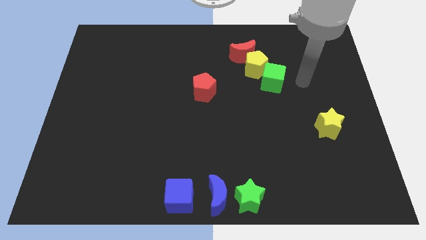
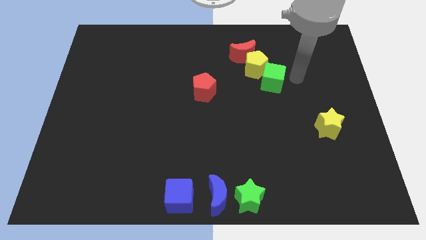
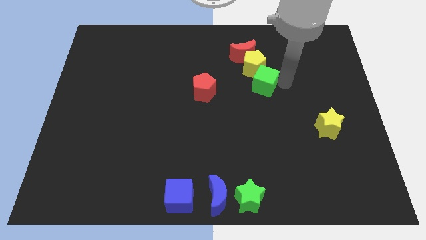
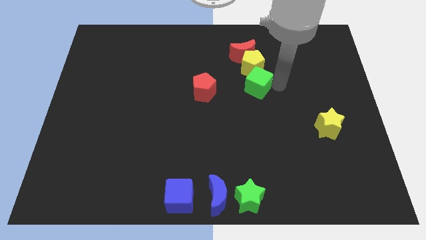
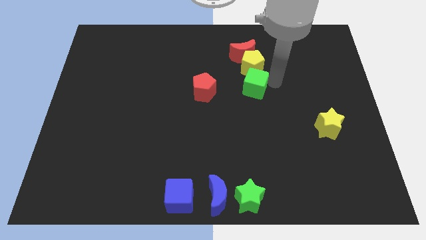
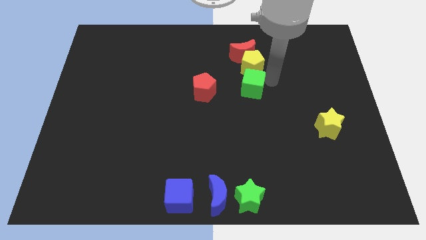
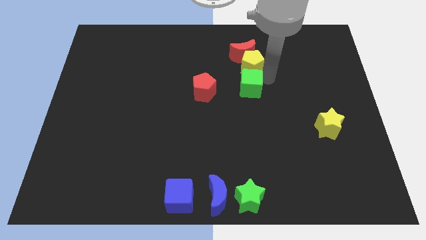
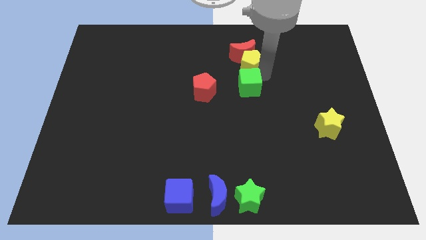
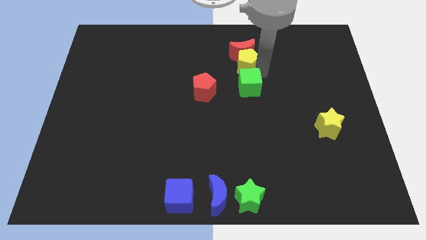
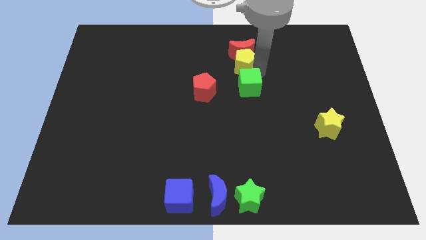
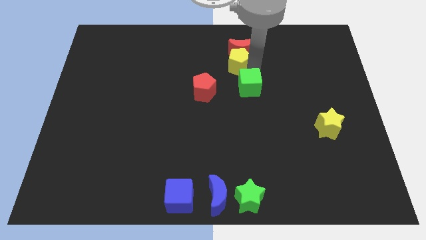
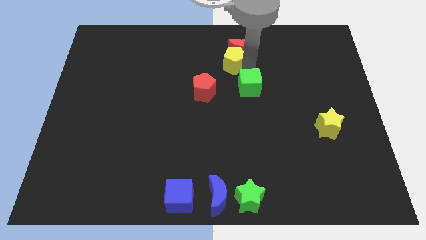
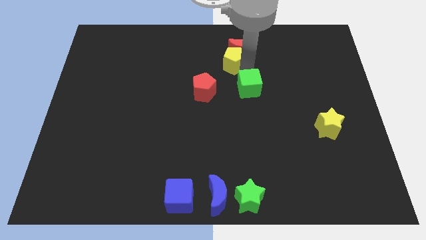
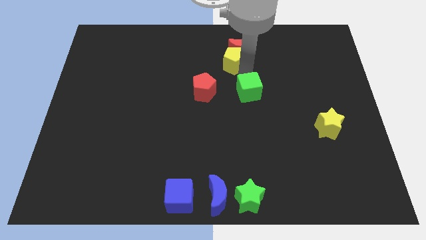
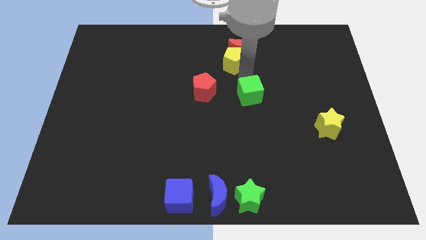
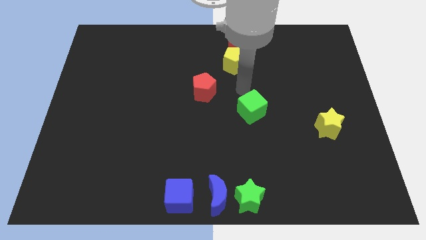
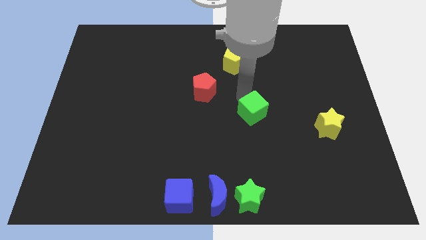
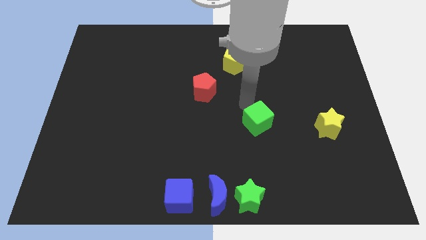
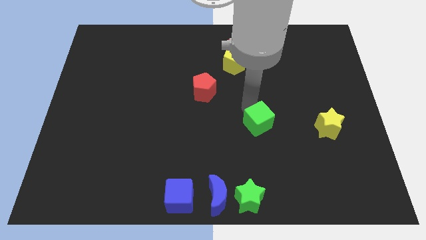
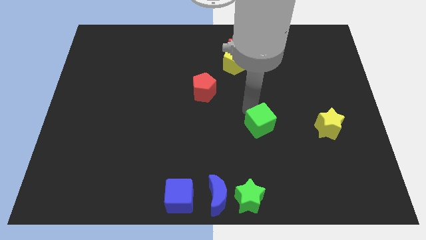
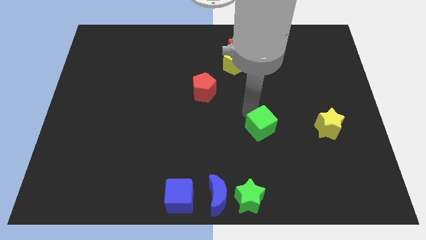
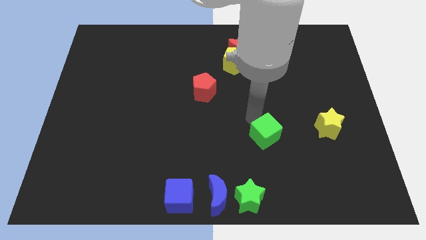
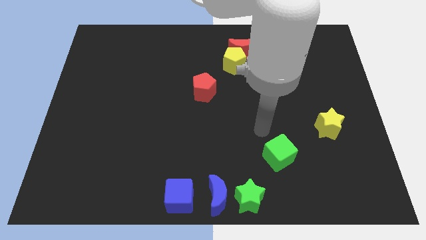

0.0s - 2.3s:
move the green cube diagonally to the left of yellow star

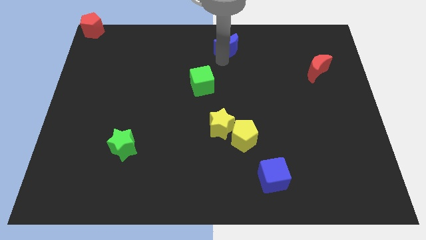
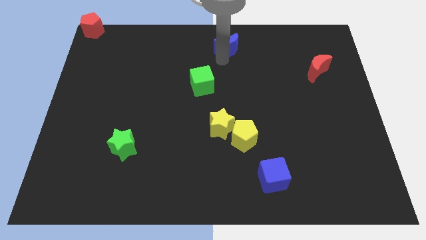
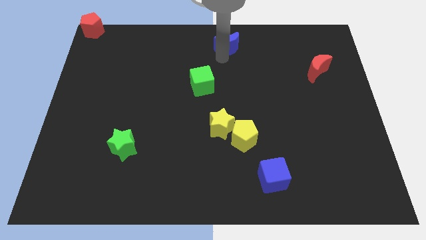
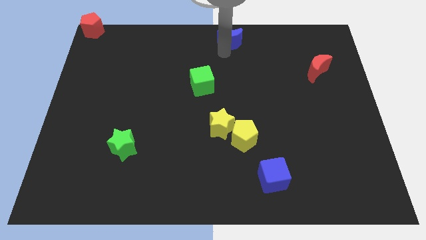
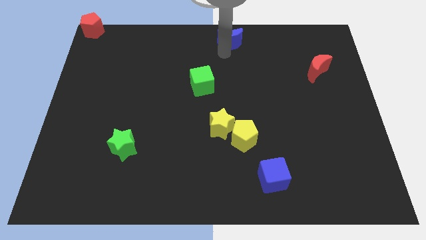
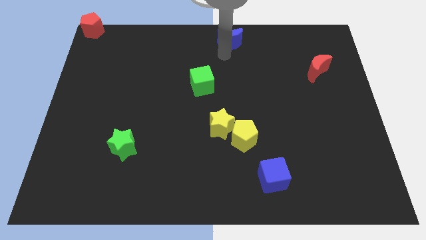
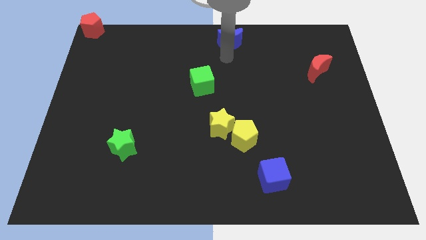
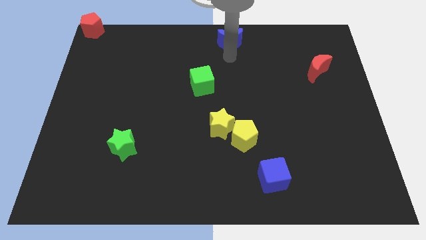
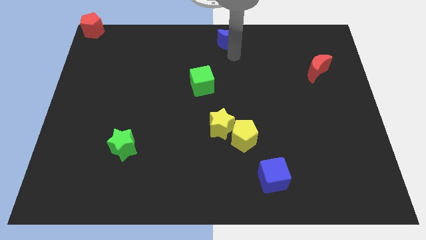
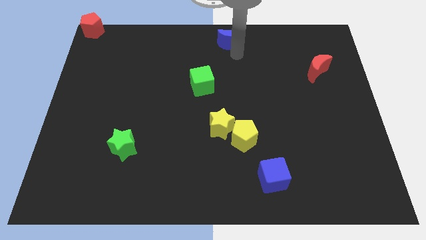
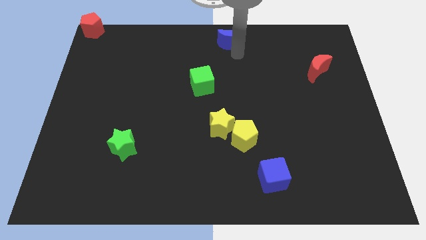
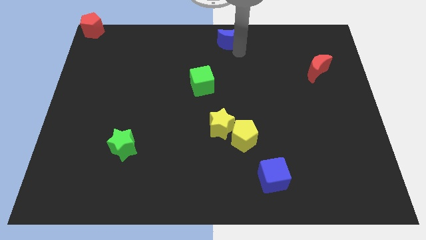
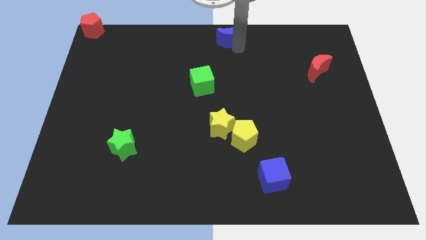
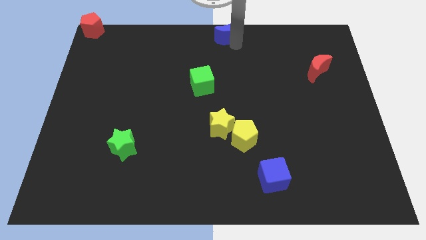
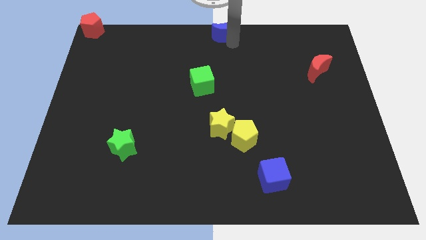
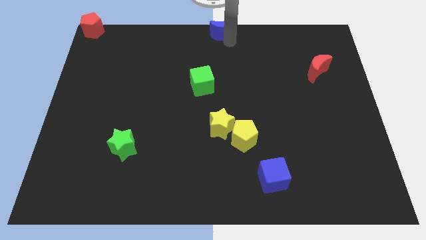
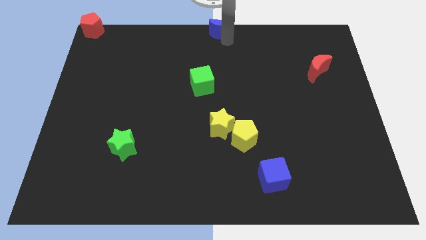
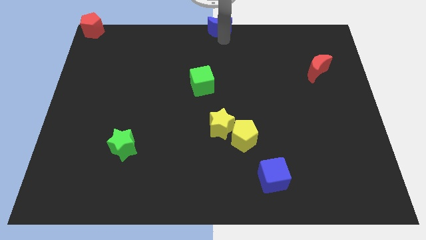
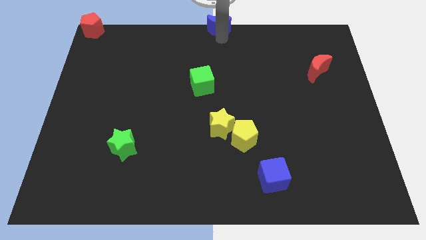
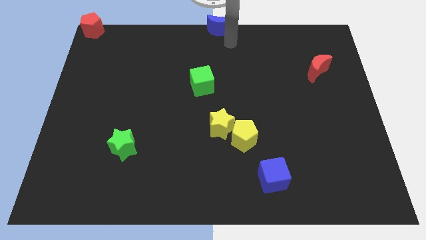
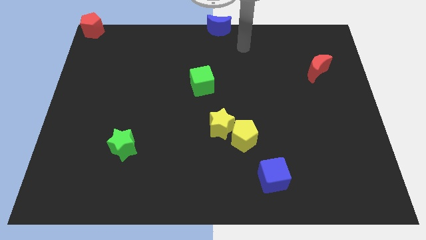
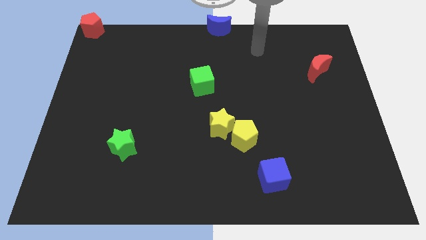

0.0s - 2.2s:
place the blue crescent to the top center of the board

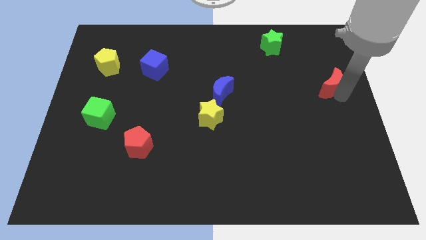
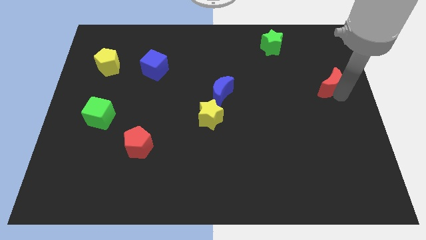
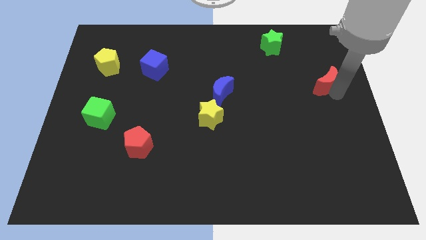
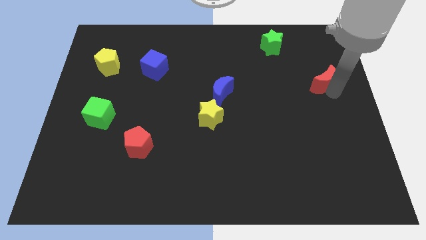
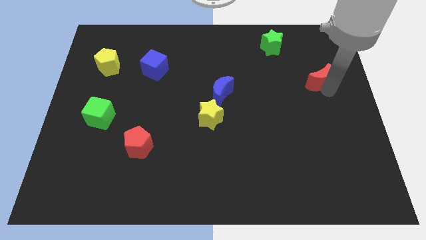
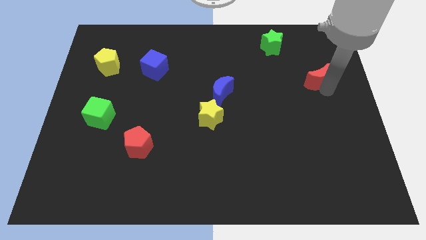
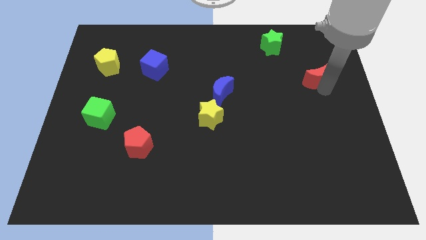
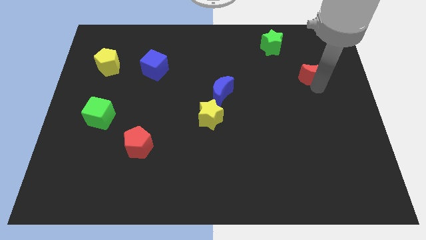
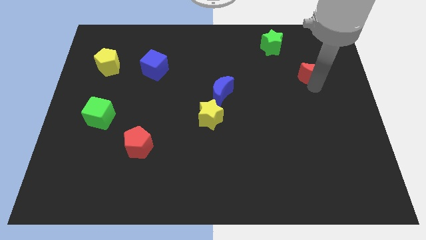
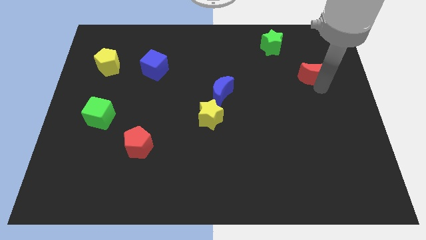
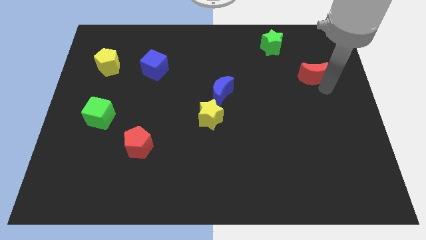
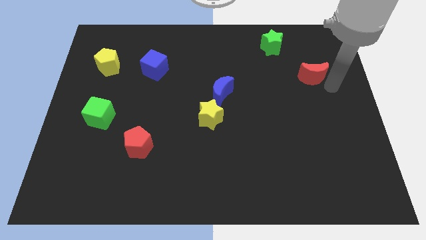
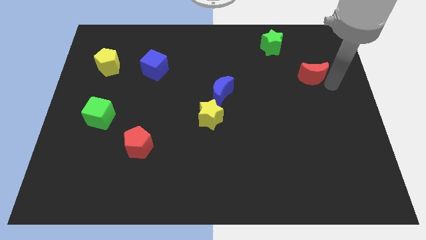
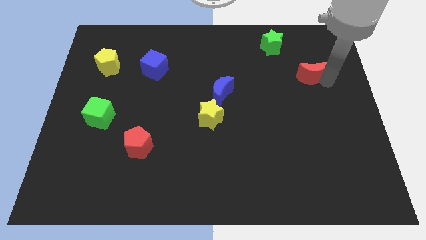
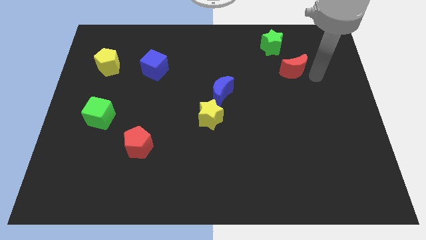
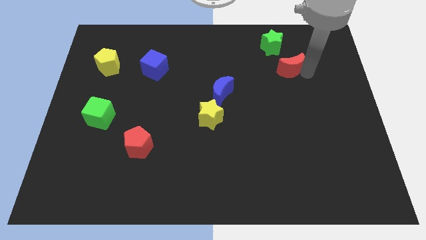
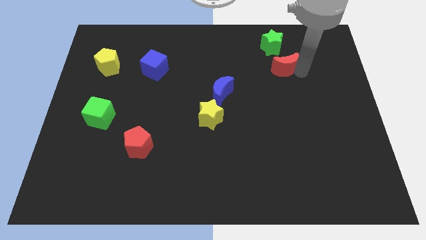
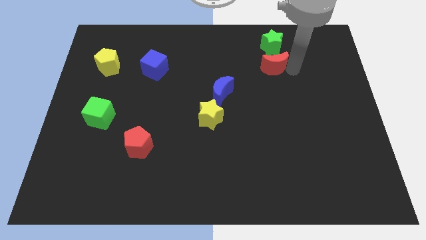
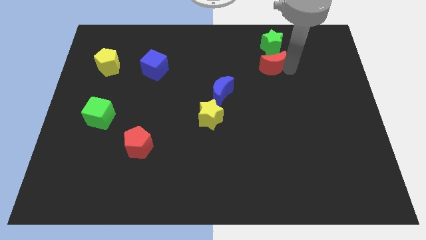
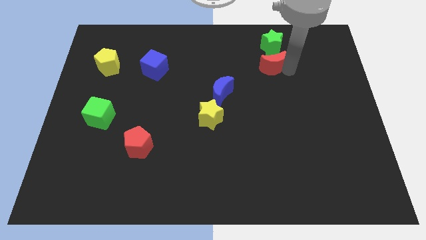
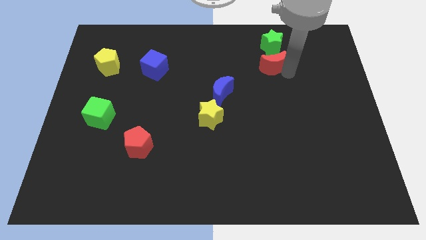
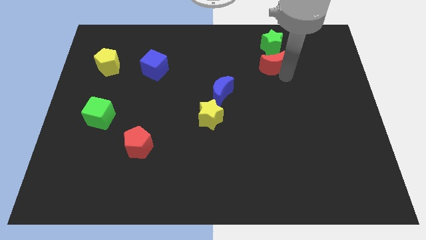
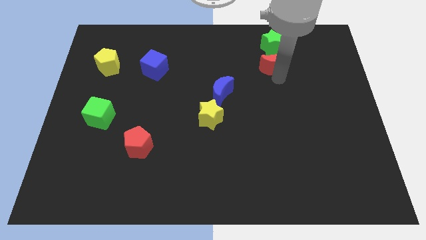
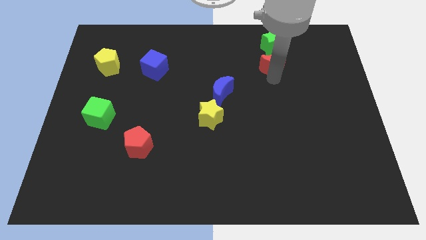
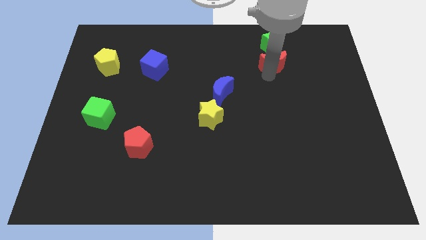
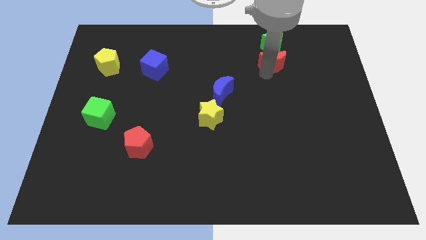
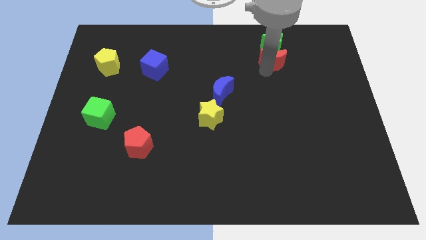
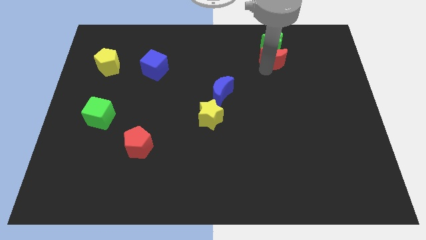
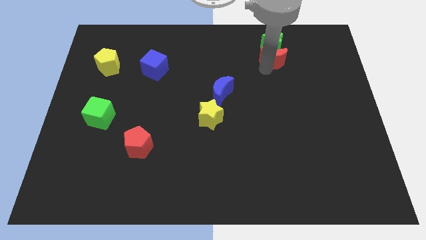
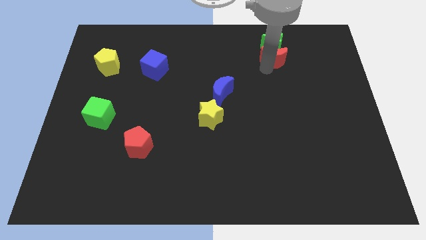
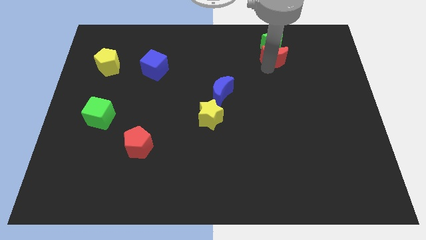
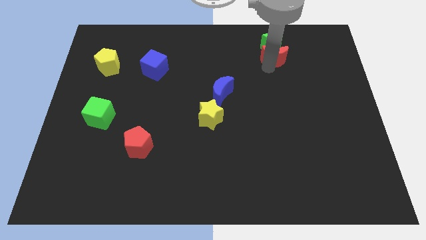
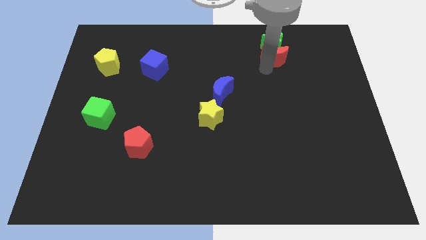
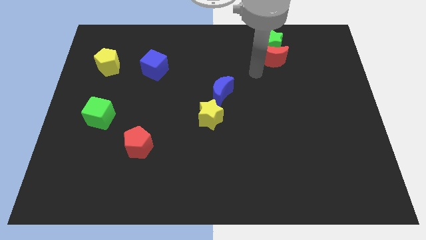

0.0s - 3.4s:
place the red crescent below the green star

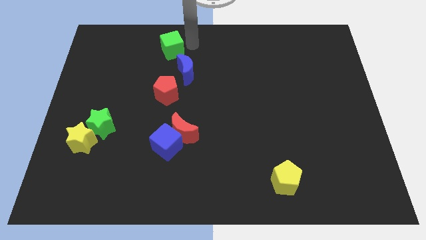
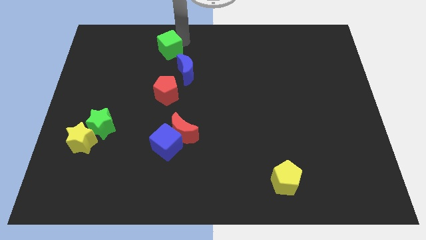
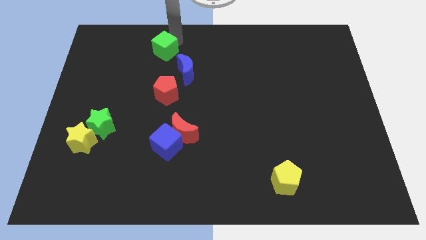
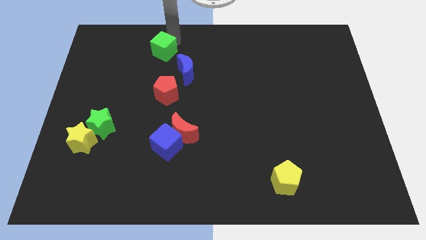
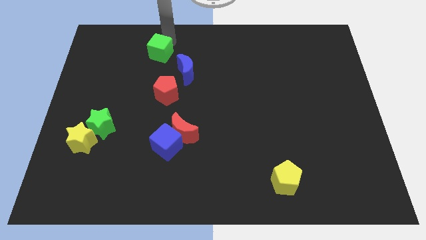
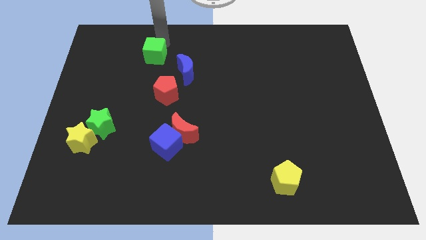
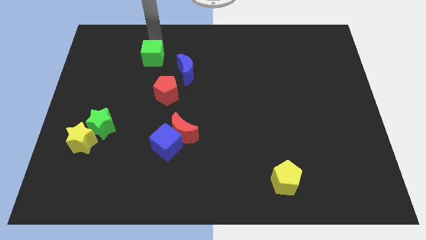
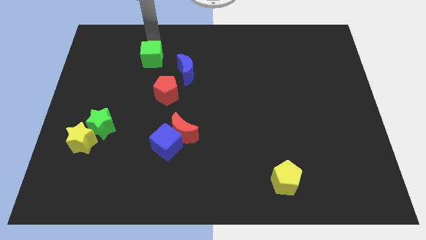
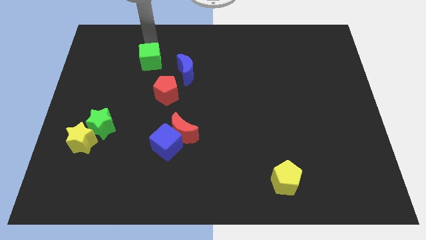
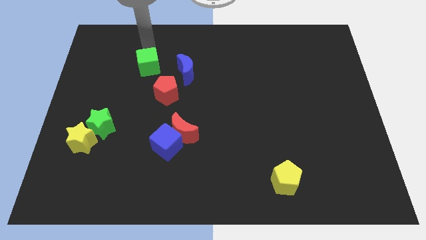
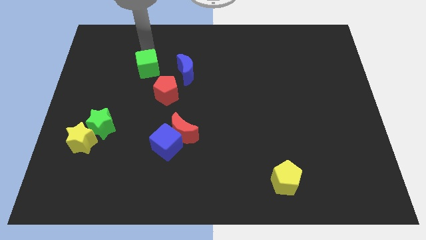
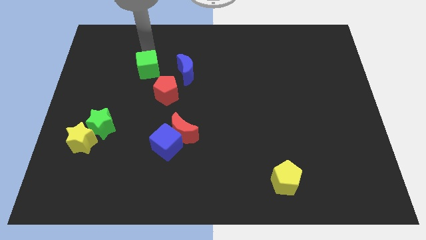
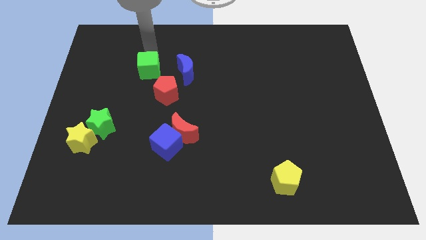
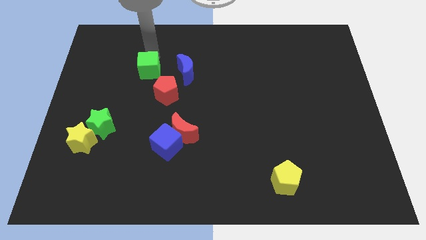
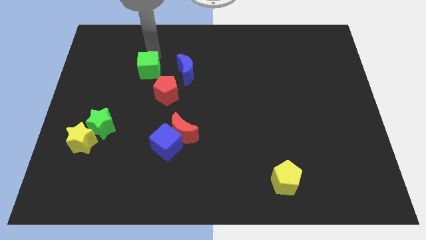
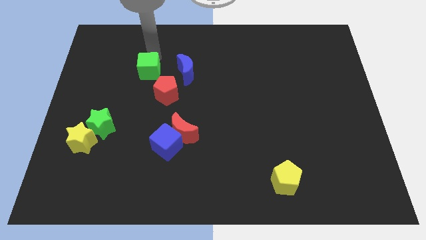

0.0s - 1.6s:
move the green cube parallel to blue moon
